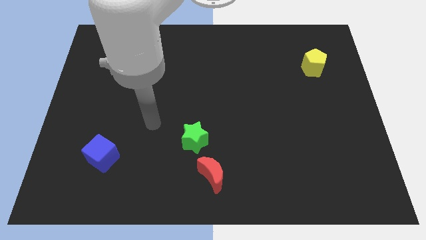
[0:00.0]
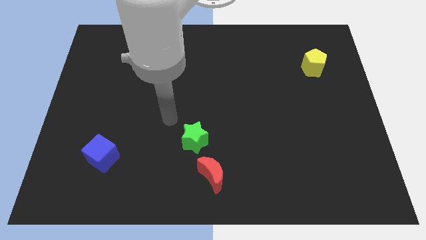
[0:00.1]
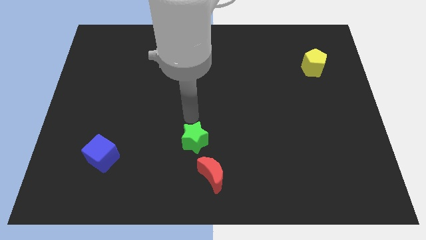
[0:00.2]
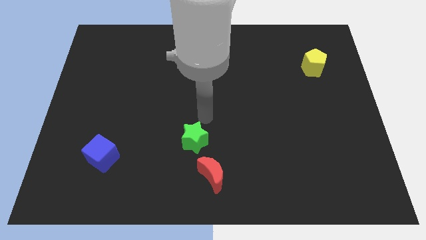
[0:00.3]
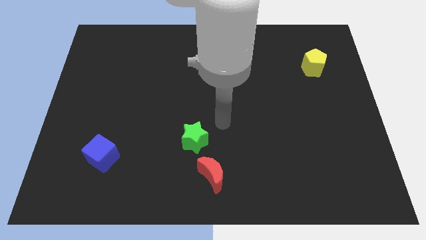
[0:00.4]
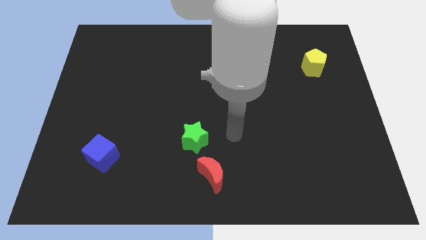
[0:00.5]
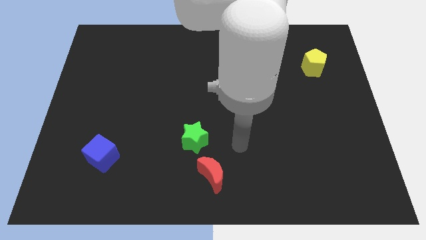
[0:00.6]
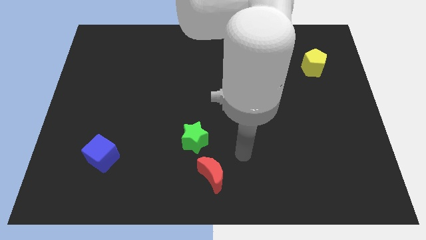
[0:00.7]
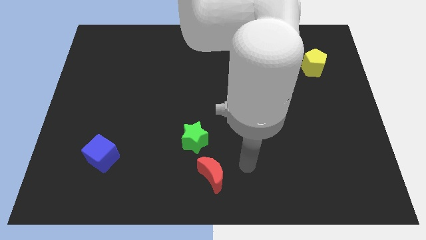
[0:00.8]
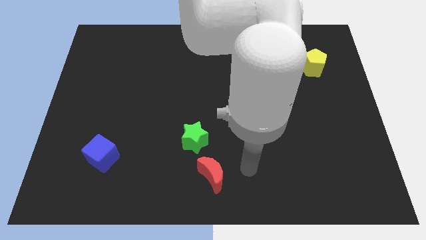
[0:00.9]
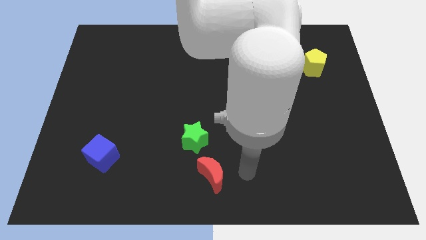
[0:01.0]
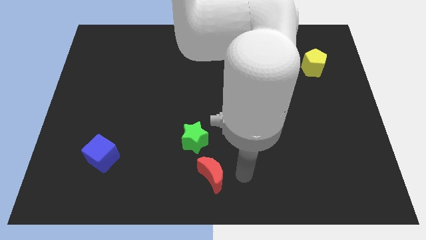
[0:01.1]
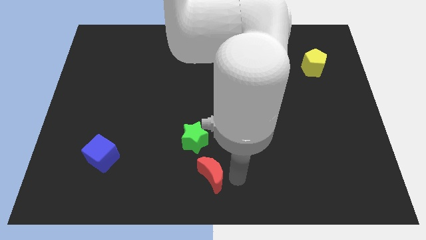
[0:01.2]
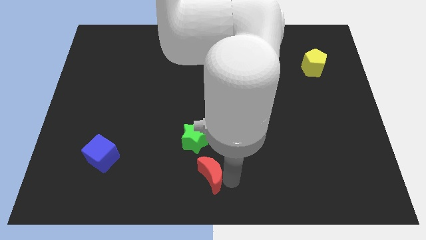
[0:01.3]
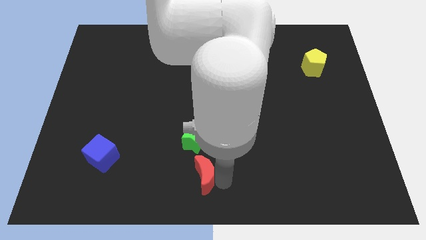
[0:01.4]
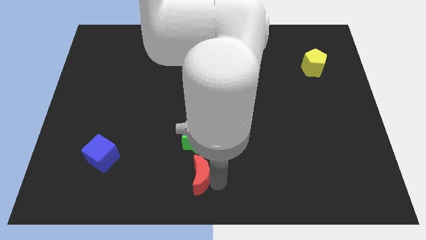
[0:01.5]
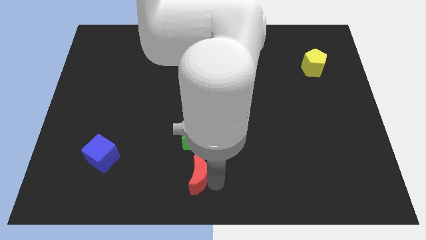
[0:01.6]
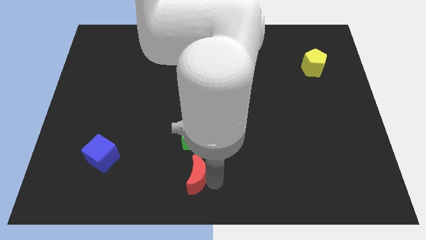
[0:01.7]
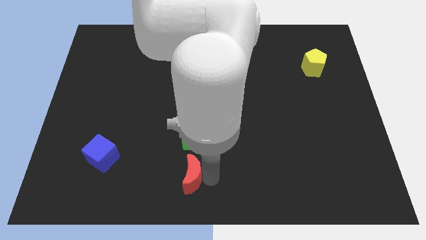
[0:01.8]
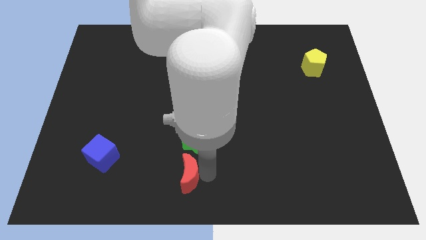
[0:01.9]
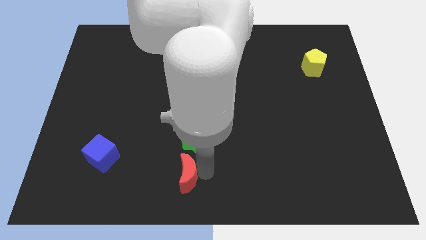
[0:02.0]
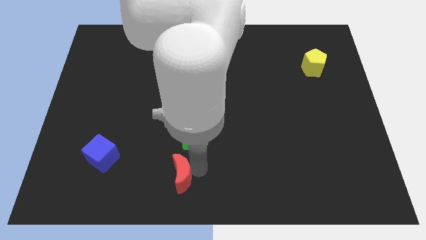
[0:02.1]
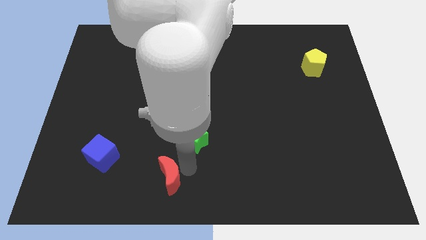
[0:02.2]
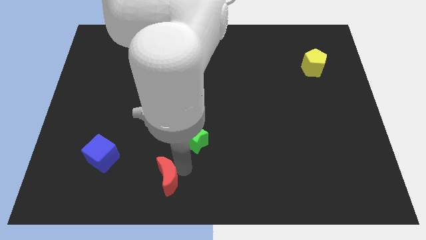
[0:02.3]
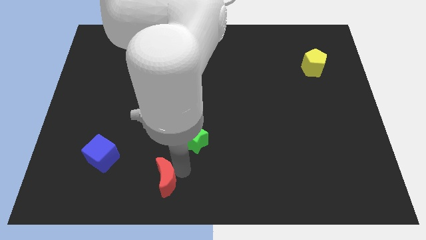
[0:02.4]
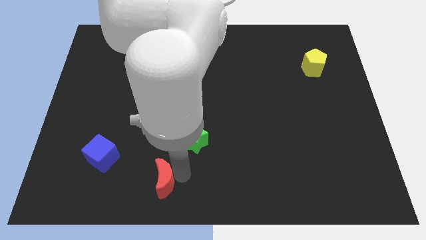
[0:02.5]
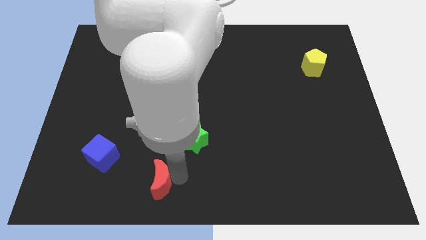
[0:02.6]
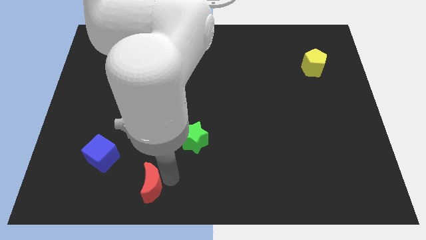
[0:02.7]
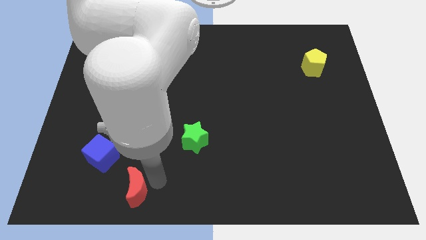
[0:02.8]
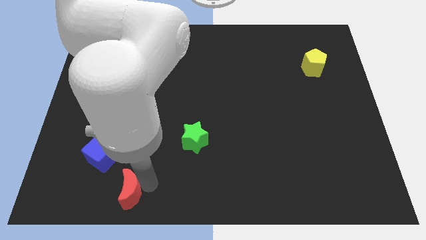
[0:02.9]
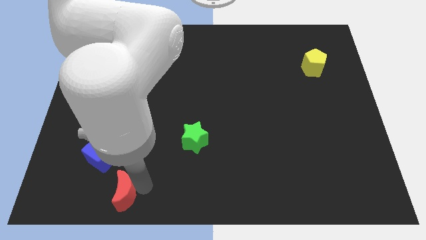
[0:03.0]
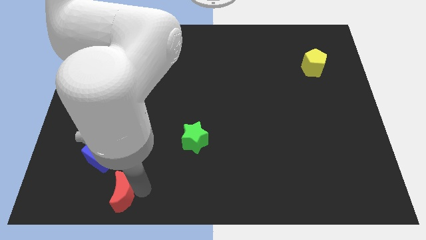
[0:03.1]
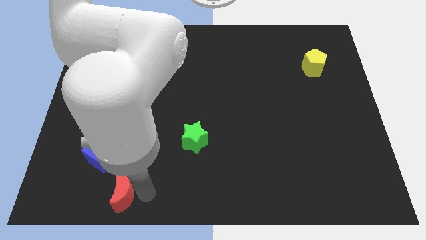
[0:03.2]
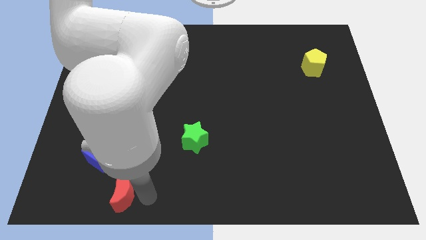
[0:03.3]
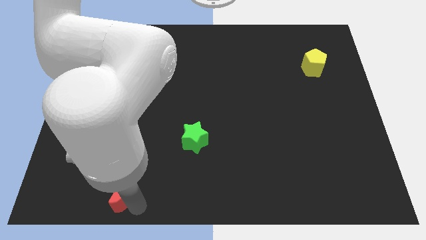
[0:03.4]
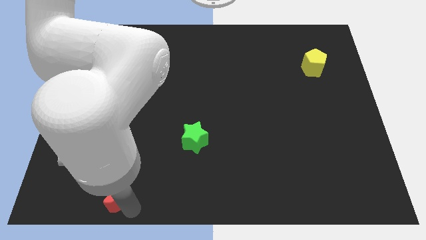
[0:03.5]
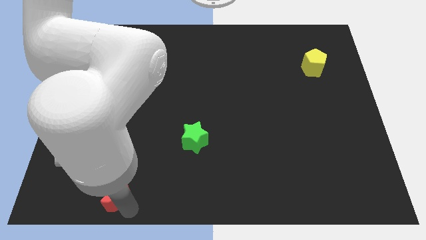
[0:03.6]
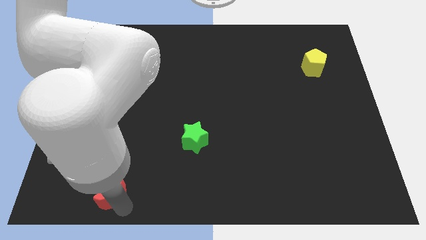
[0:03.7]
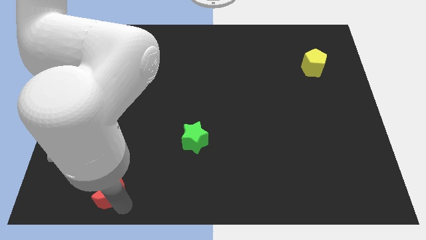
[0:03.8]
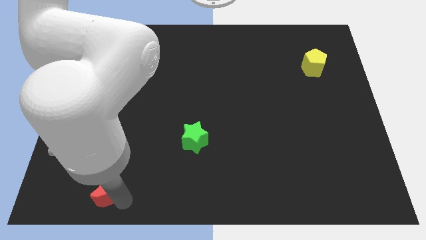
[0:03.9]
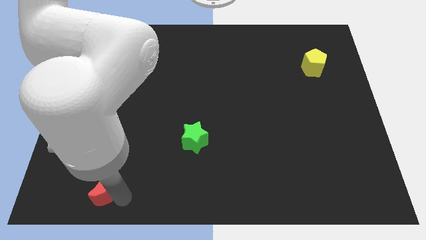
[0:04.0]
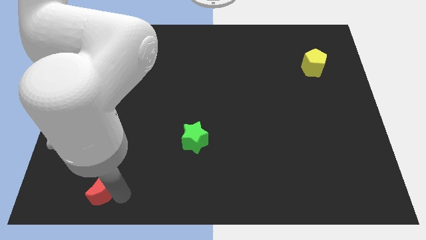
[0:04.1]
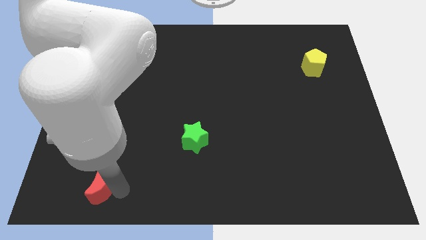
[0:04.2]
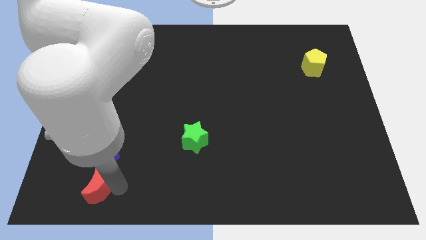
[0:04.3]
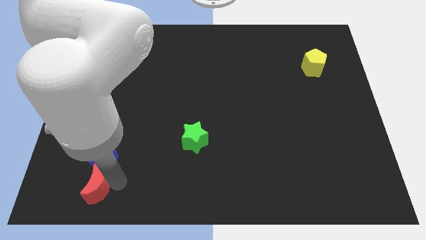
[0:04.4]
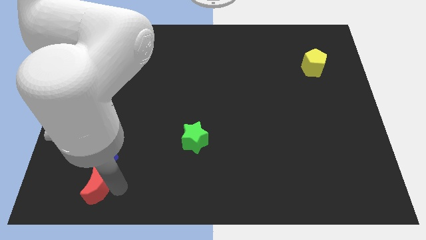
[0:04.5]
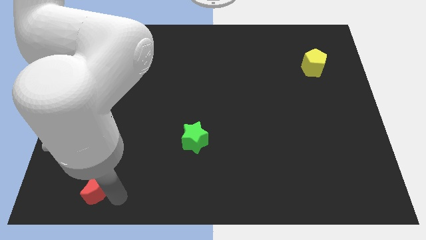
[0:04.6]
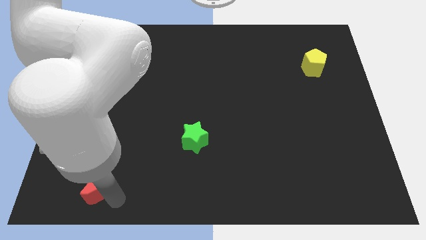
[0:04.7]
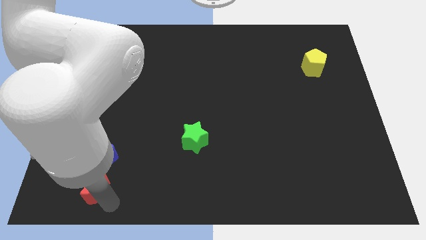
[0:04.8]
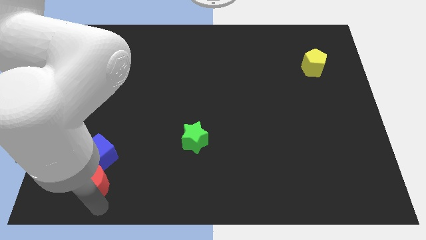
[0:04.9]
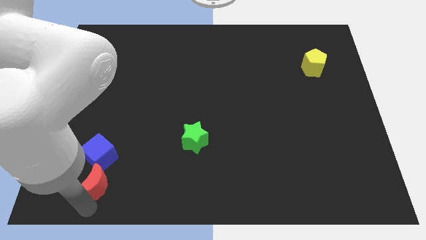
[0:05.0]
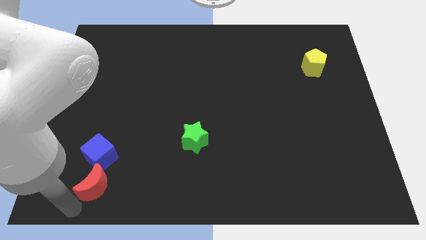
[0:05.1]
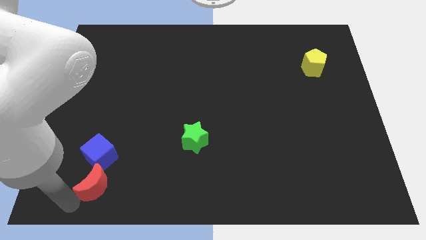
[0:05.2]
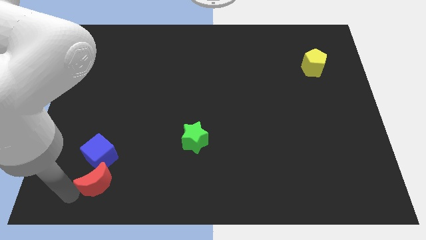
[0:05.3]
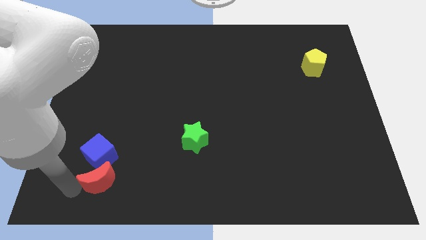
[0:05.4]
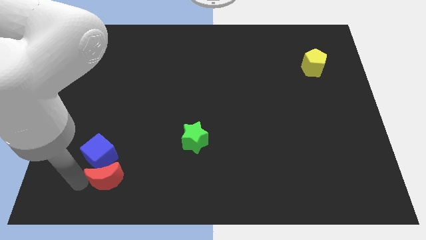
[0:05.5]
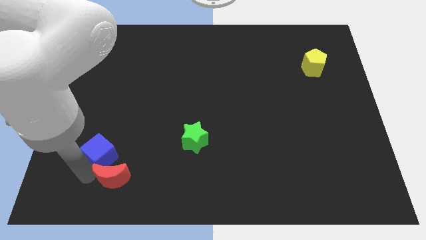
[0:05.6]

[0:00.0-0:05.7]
push the moon towards the blue cube

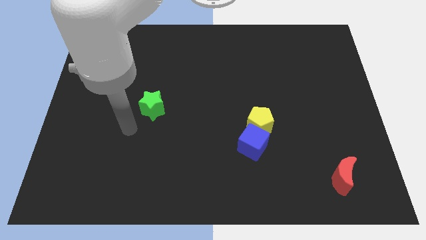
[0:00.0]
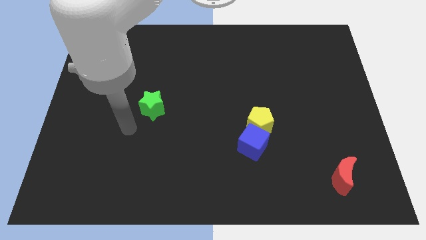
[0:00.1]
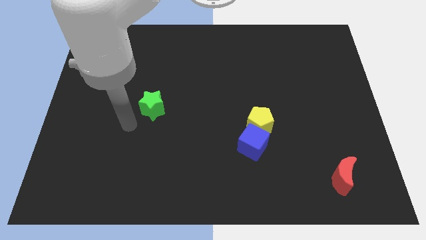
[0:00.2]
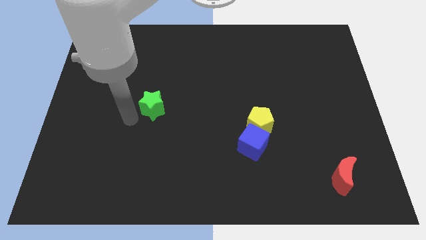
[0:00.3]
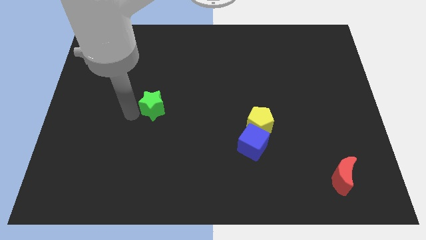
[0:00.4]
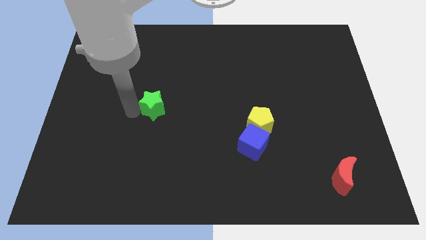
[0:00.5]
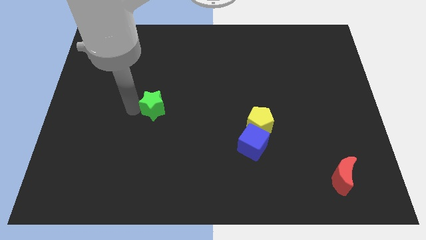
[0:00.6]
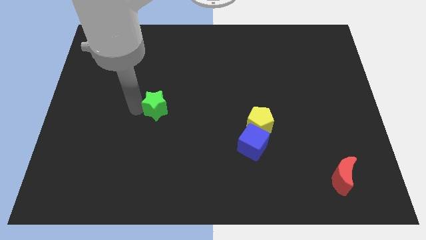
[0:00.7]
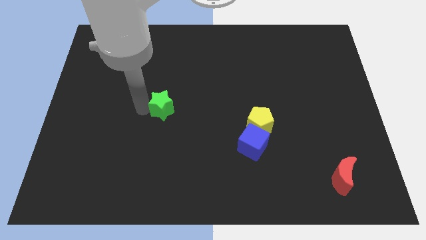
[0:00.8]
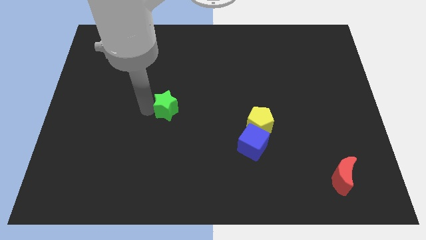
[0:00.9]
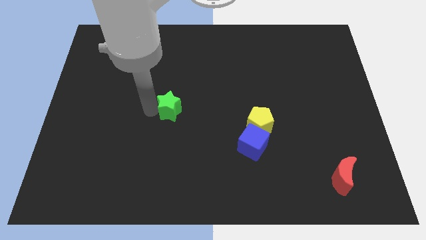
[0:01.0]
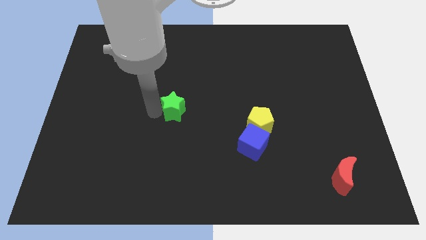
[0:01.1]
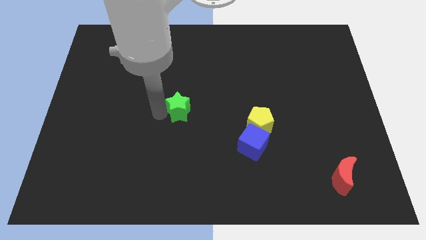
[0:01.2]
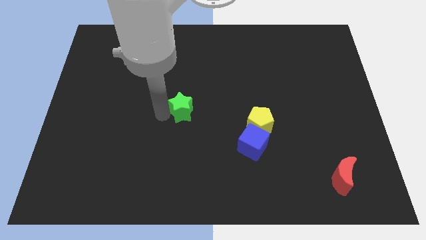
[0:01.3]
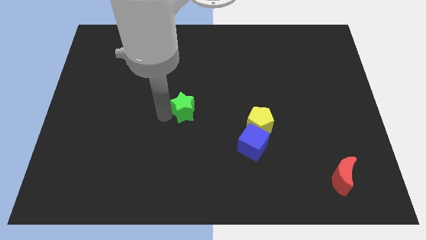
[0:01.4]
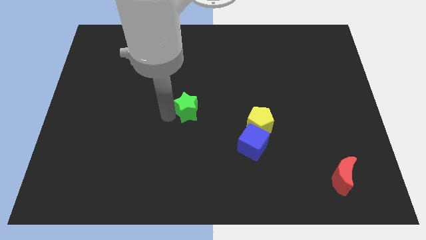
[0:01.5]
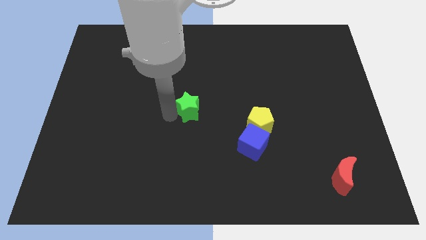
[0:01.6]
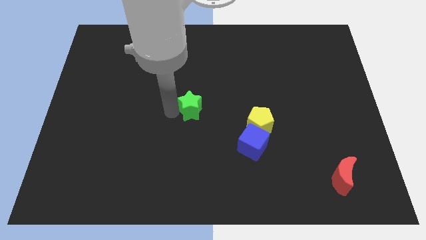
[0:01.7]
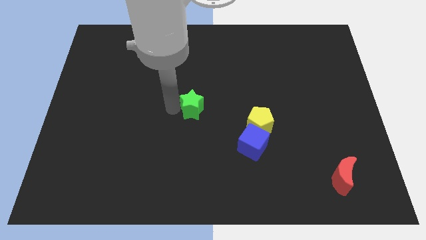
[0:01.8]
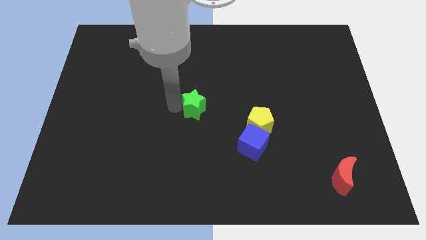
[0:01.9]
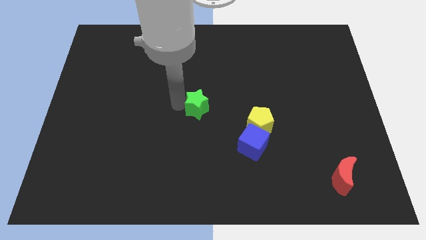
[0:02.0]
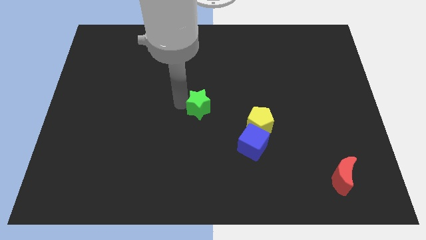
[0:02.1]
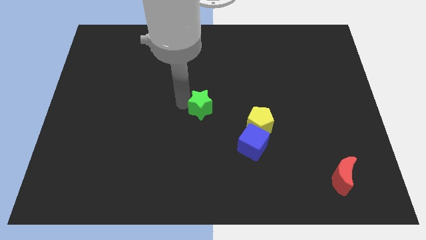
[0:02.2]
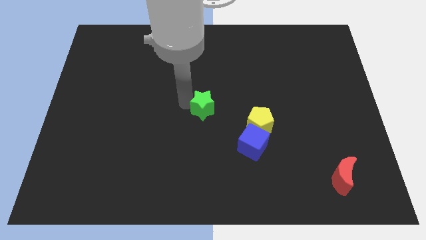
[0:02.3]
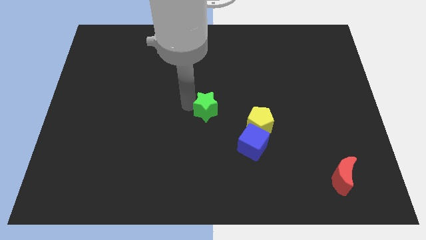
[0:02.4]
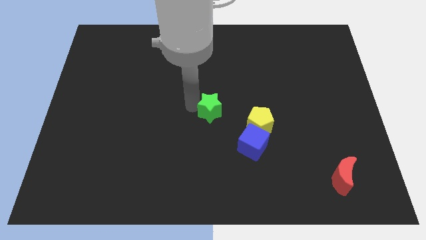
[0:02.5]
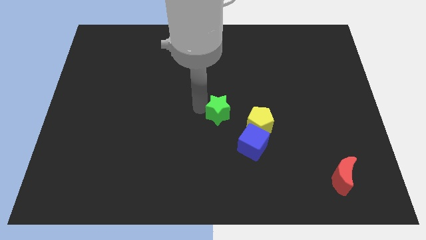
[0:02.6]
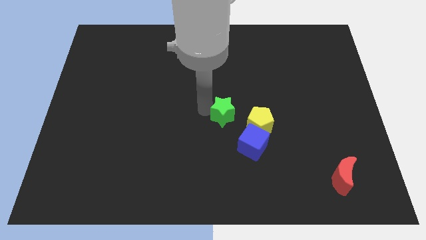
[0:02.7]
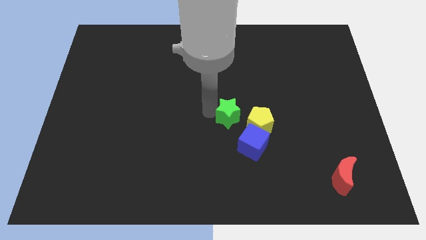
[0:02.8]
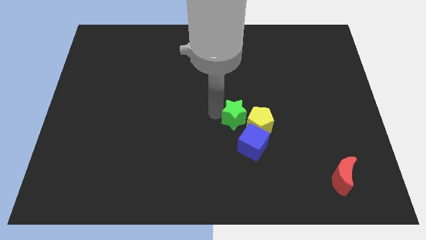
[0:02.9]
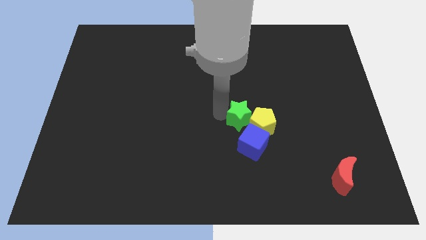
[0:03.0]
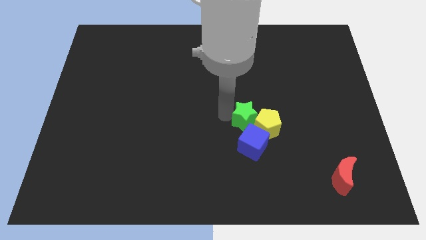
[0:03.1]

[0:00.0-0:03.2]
put the green star close to the yellow block
